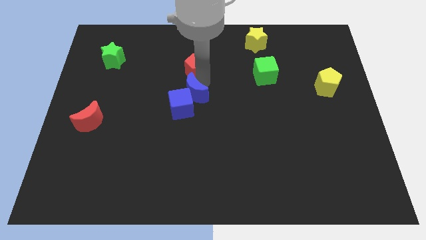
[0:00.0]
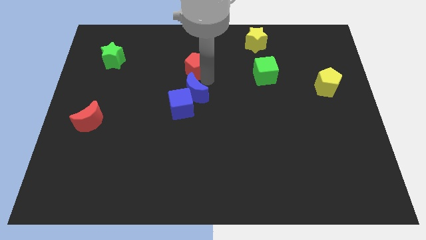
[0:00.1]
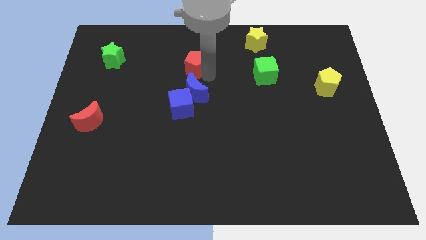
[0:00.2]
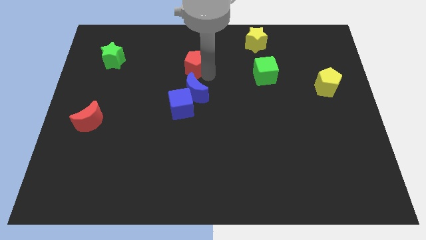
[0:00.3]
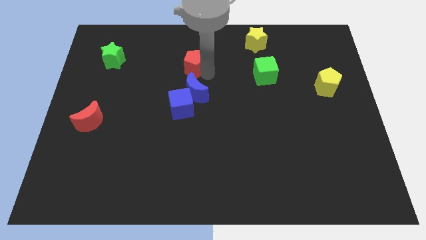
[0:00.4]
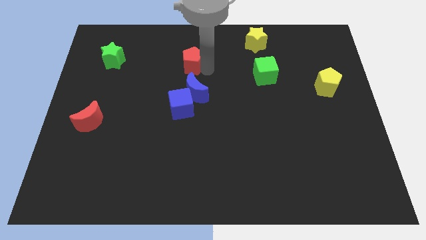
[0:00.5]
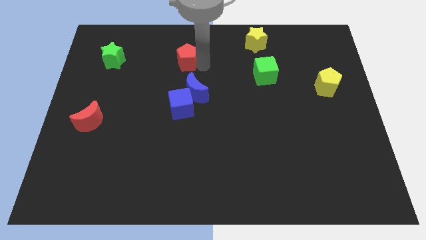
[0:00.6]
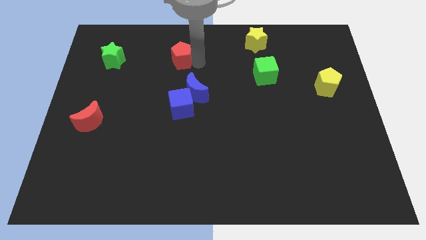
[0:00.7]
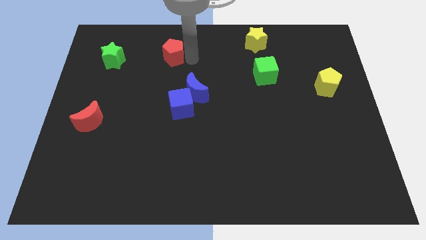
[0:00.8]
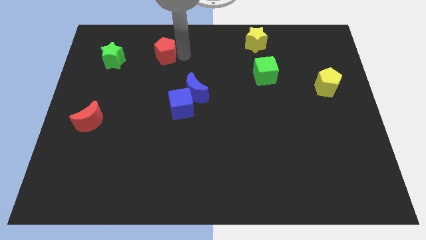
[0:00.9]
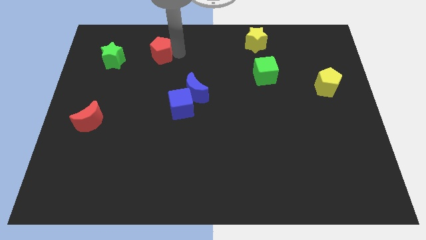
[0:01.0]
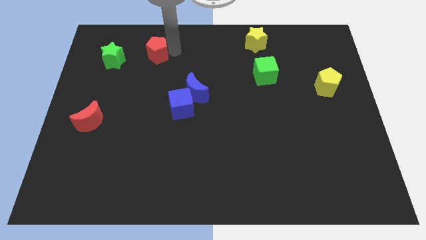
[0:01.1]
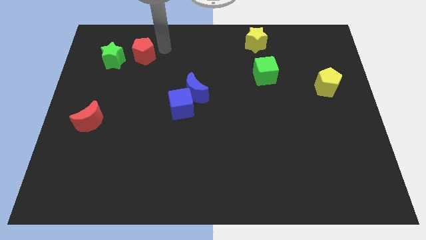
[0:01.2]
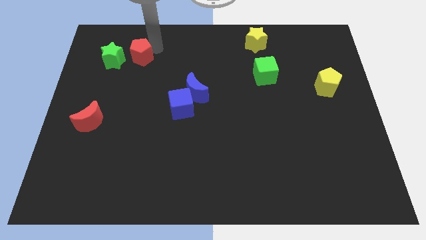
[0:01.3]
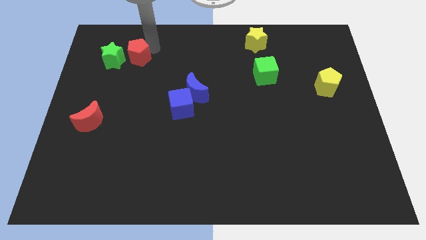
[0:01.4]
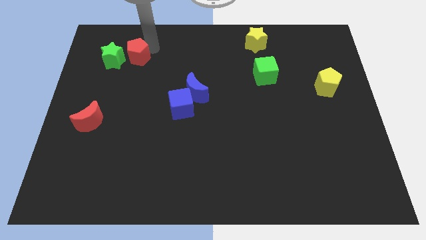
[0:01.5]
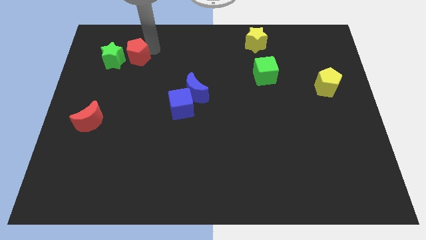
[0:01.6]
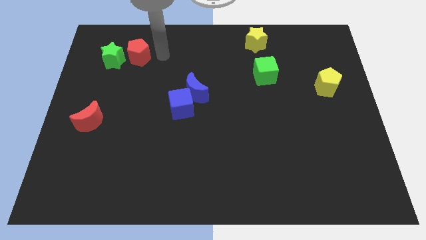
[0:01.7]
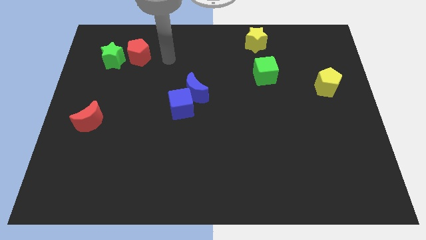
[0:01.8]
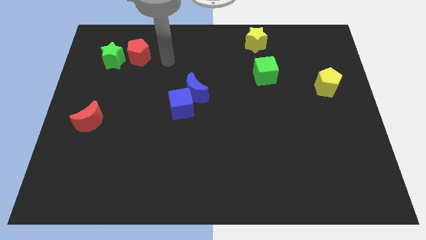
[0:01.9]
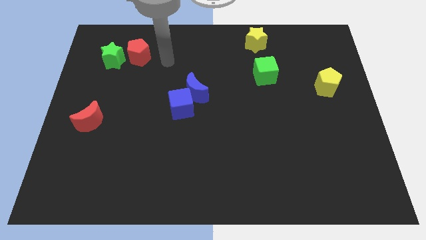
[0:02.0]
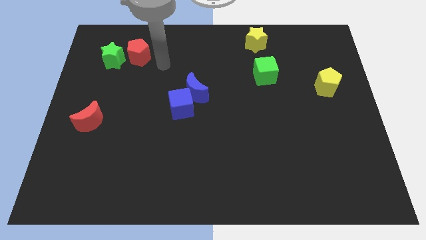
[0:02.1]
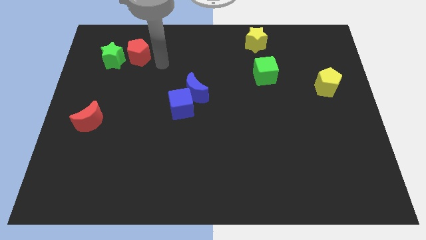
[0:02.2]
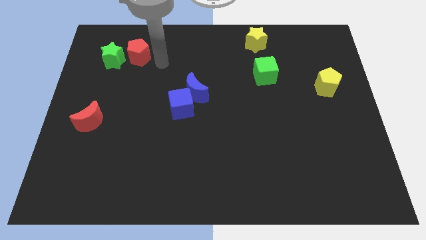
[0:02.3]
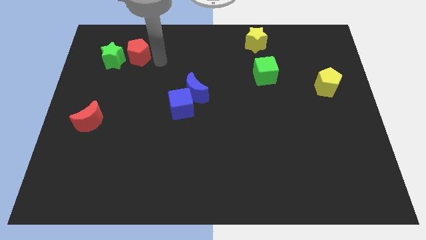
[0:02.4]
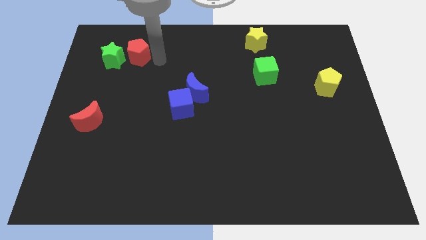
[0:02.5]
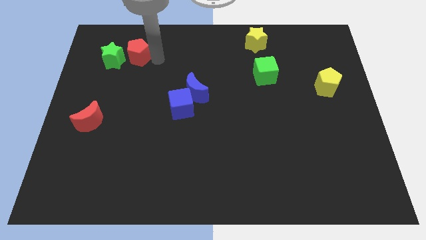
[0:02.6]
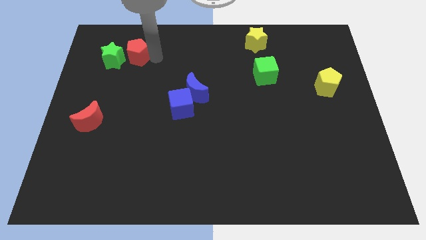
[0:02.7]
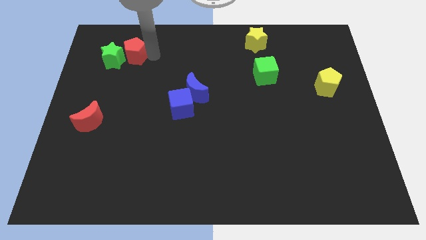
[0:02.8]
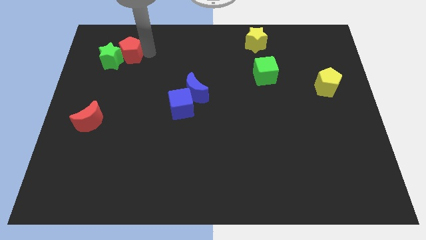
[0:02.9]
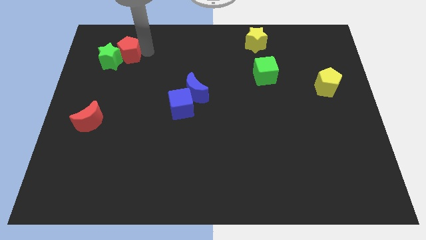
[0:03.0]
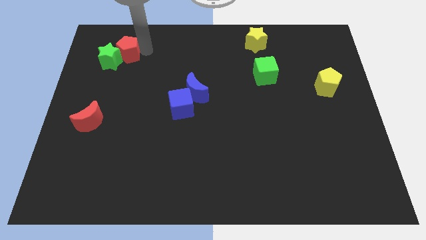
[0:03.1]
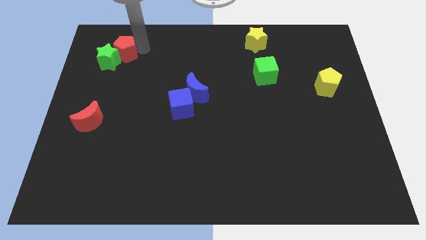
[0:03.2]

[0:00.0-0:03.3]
push the red pentagon into the green star

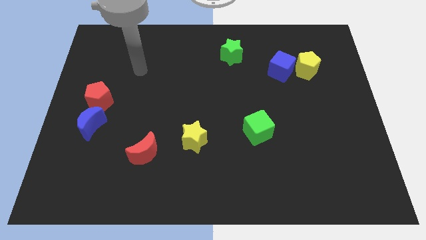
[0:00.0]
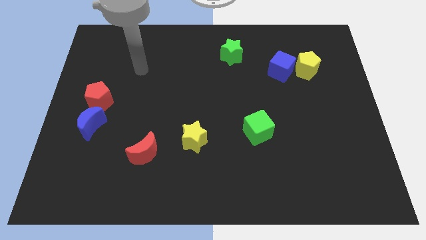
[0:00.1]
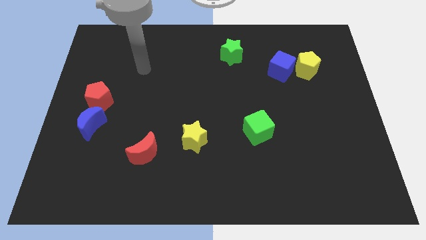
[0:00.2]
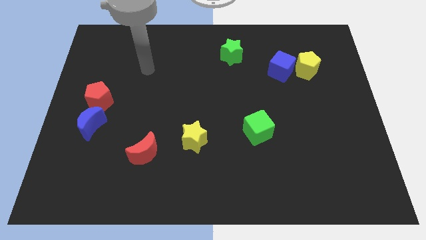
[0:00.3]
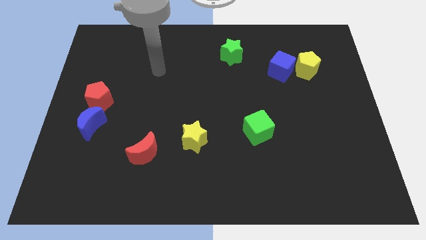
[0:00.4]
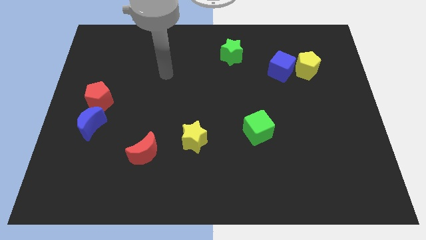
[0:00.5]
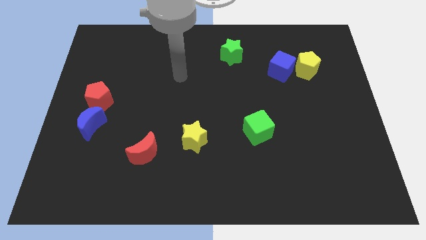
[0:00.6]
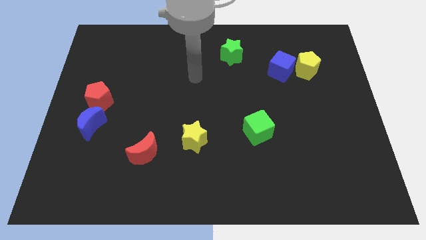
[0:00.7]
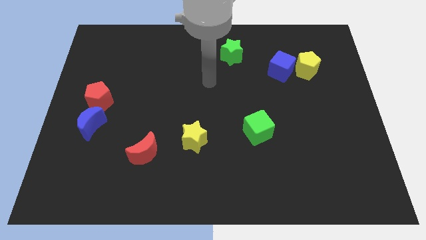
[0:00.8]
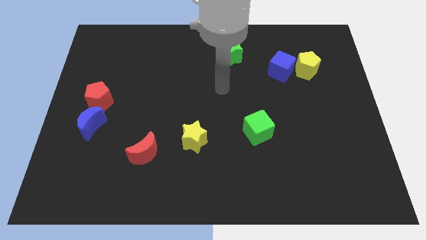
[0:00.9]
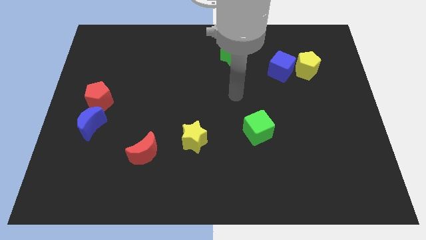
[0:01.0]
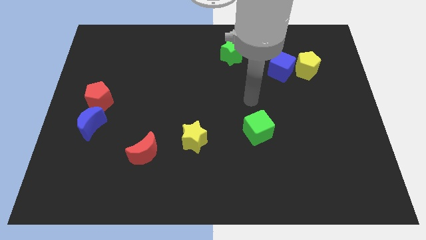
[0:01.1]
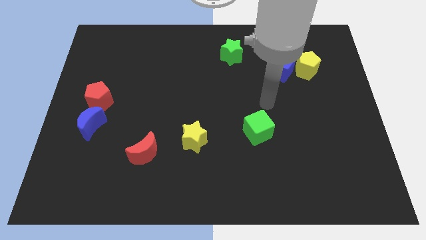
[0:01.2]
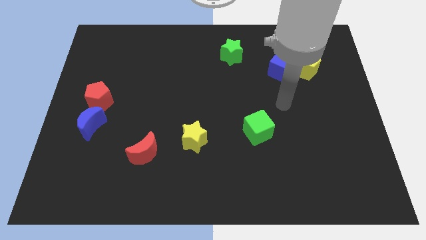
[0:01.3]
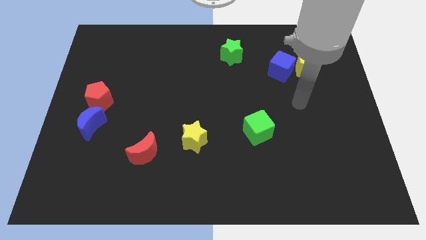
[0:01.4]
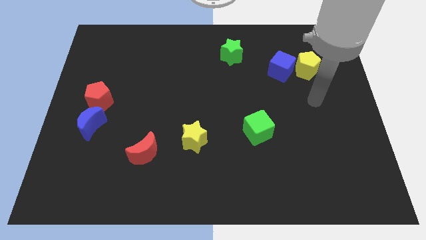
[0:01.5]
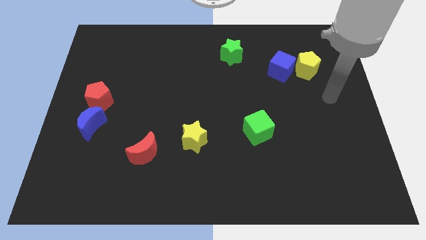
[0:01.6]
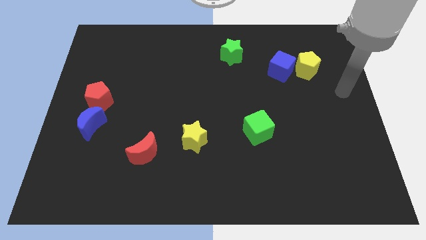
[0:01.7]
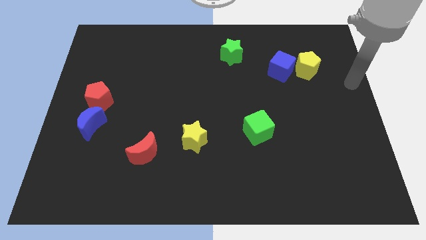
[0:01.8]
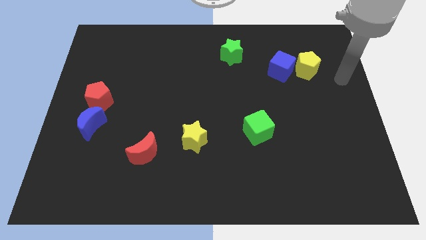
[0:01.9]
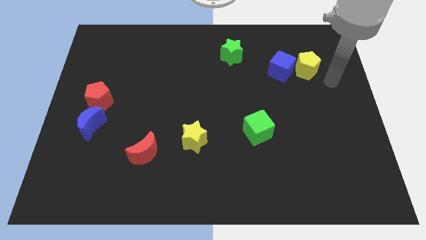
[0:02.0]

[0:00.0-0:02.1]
move your arm close to the right side of the yellow pentagon

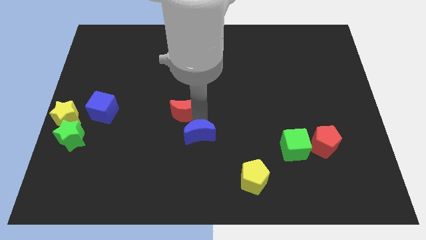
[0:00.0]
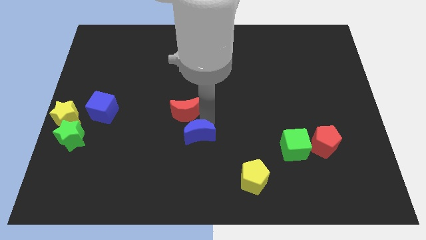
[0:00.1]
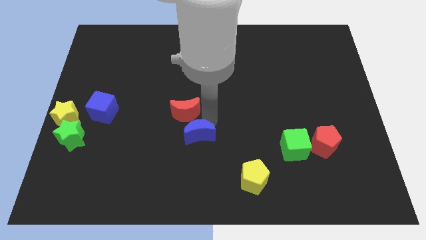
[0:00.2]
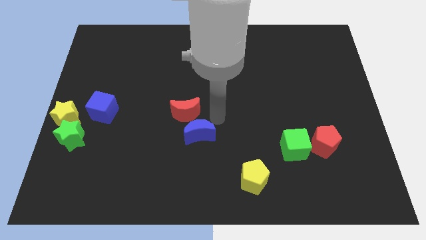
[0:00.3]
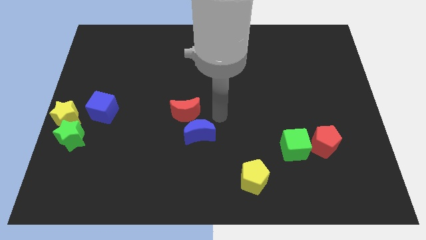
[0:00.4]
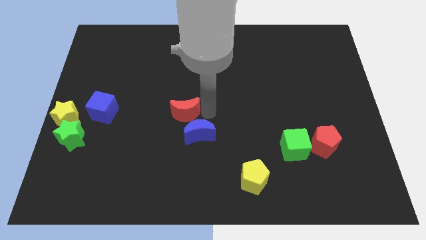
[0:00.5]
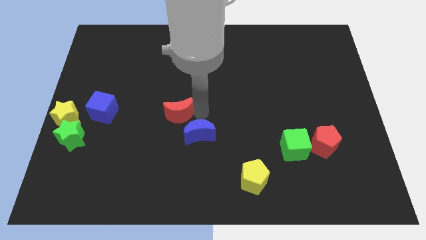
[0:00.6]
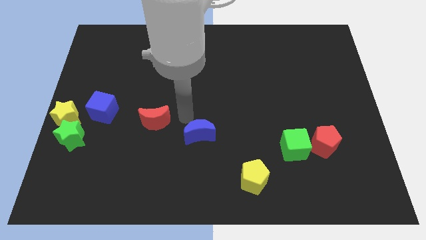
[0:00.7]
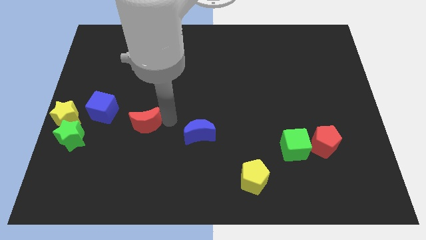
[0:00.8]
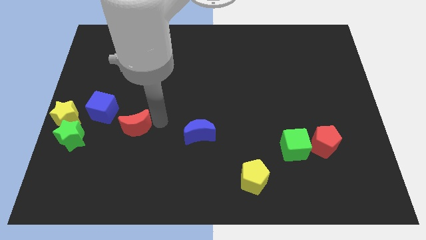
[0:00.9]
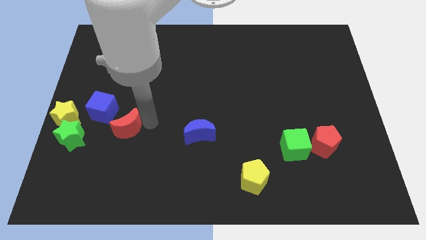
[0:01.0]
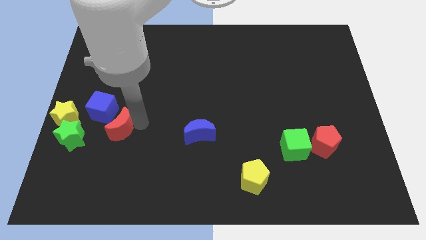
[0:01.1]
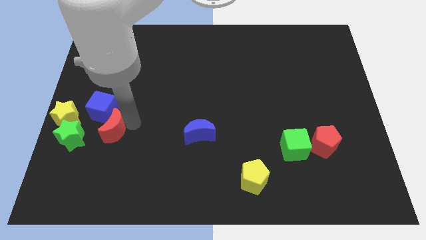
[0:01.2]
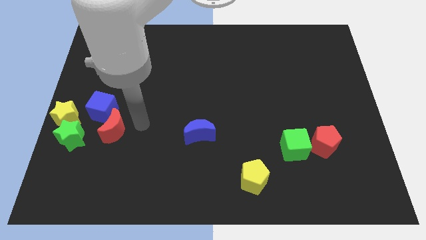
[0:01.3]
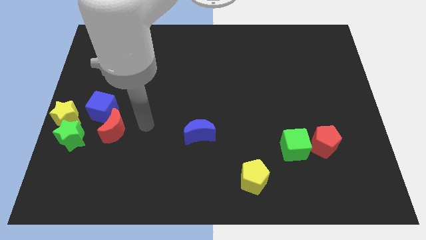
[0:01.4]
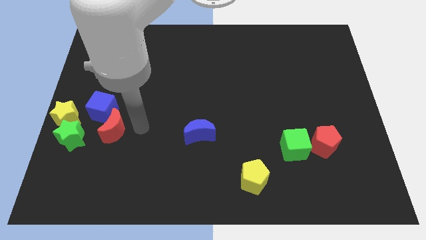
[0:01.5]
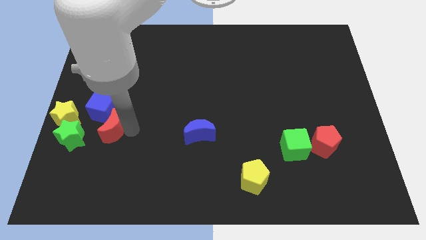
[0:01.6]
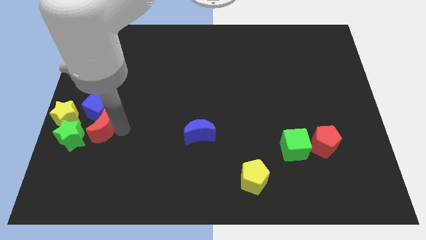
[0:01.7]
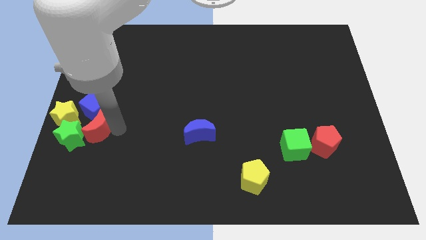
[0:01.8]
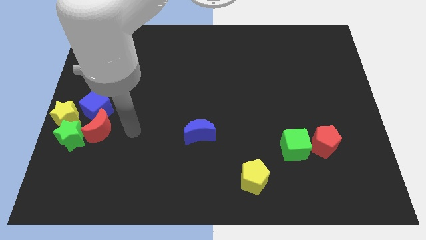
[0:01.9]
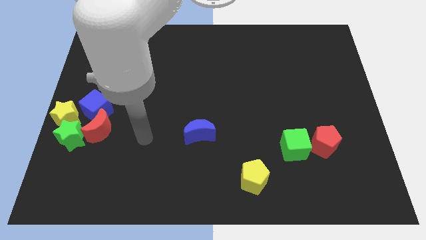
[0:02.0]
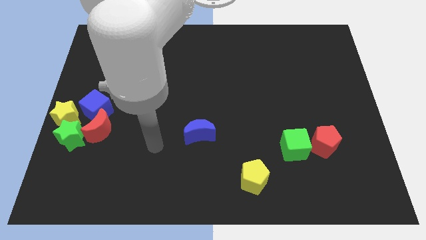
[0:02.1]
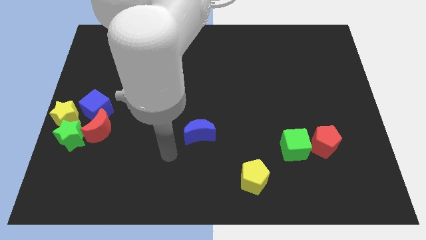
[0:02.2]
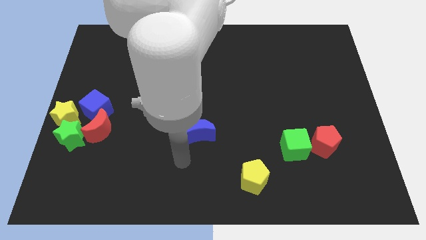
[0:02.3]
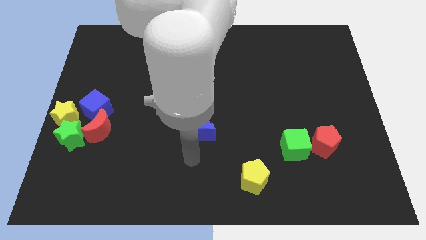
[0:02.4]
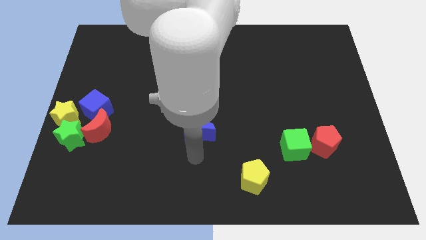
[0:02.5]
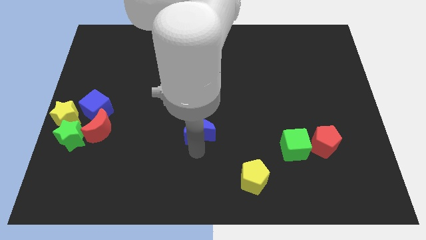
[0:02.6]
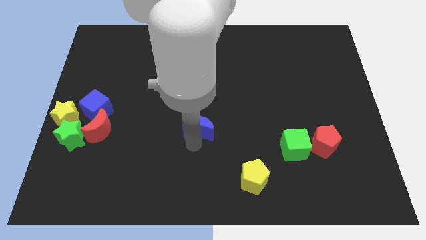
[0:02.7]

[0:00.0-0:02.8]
push the red crescent into the blue cube

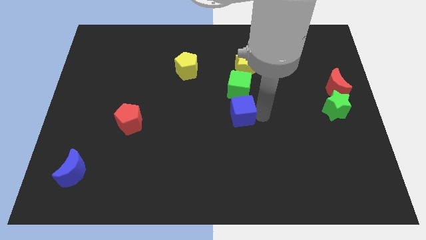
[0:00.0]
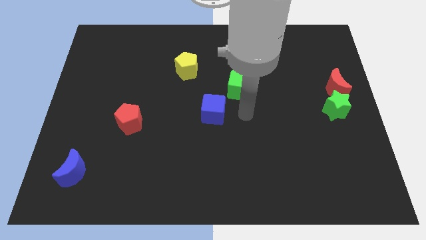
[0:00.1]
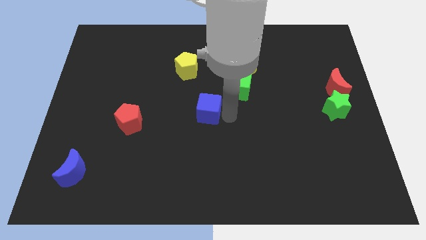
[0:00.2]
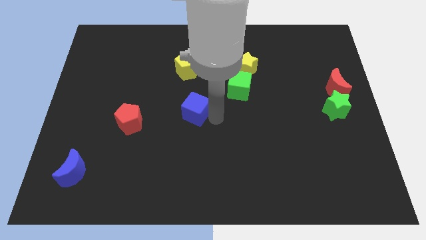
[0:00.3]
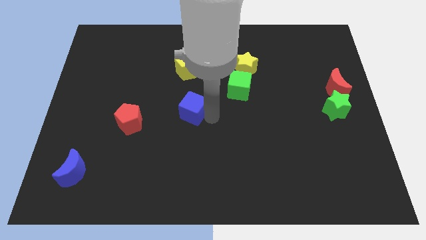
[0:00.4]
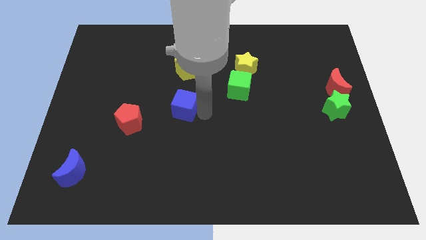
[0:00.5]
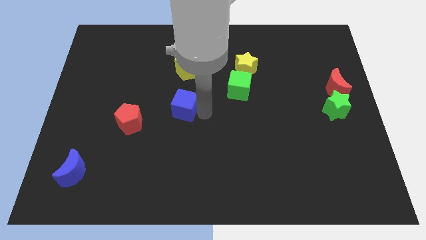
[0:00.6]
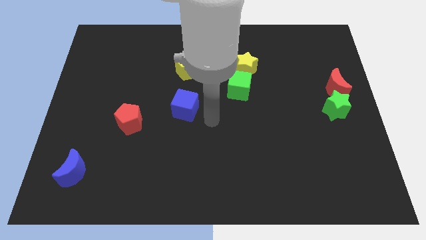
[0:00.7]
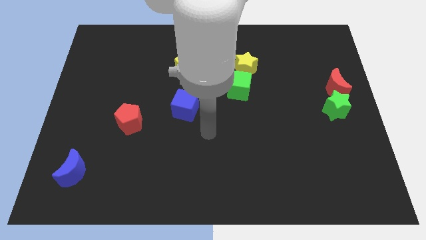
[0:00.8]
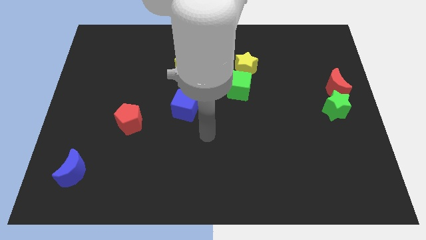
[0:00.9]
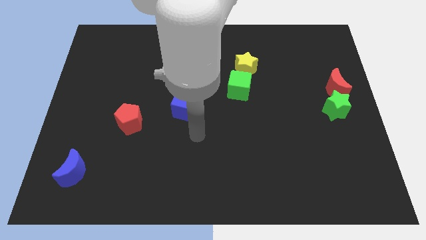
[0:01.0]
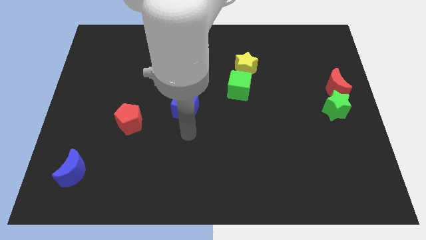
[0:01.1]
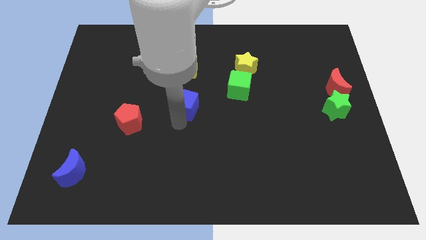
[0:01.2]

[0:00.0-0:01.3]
push the blue cube below the yellow pentagon
